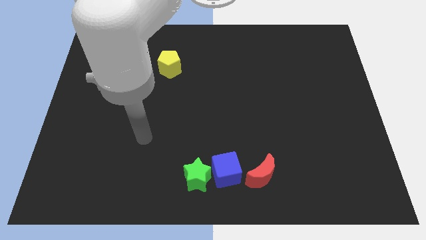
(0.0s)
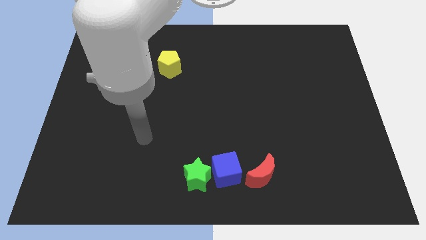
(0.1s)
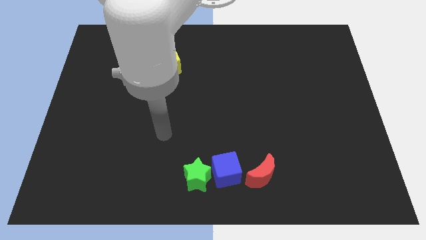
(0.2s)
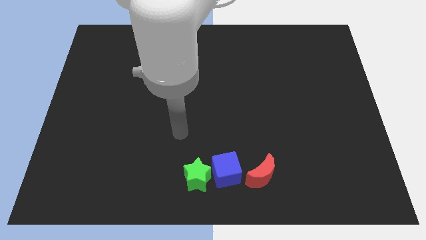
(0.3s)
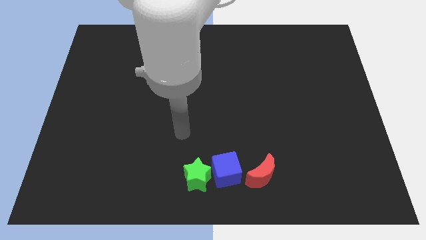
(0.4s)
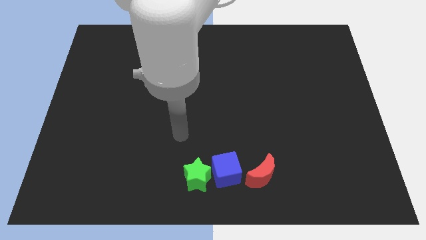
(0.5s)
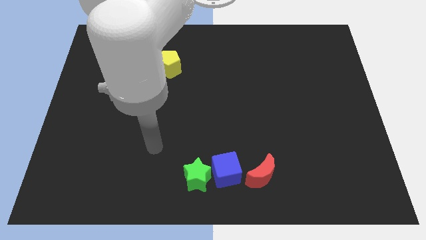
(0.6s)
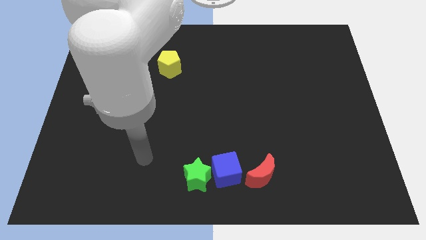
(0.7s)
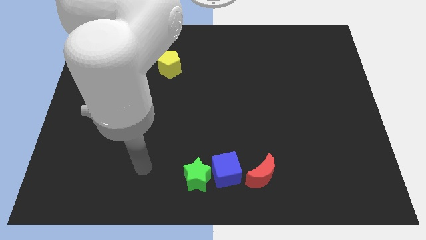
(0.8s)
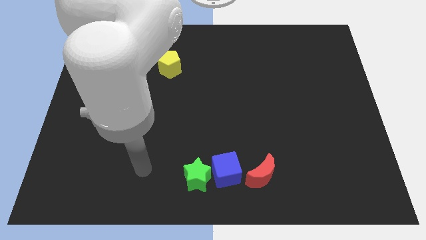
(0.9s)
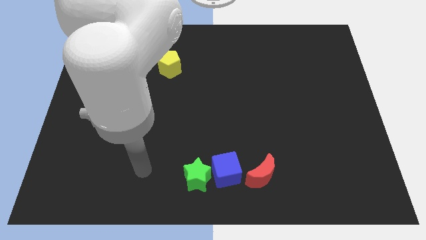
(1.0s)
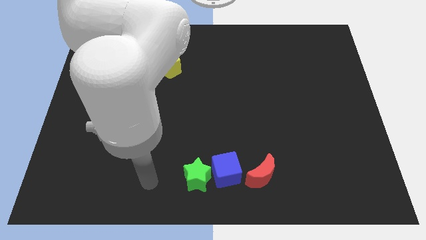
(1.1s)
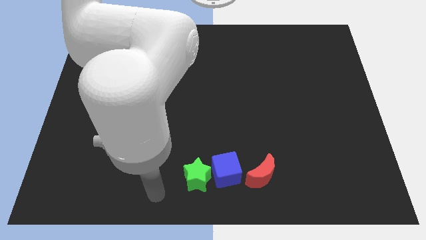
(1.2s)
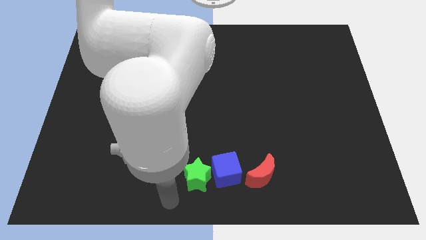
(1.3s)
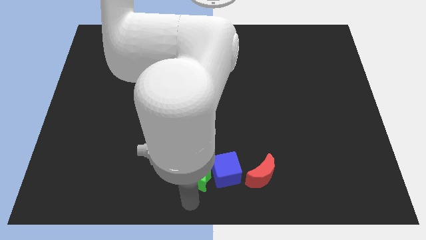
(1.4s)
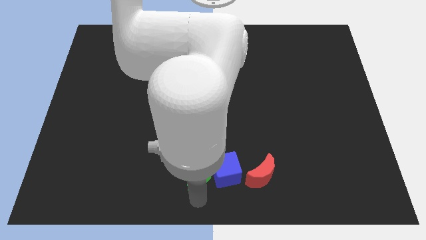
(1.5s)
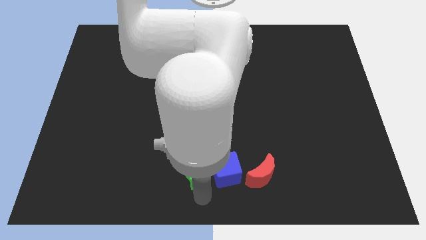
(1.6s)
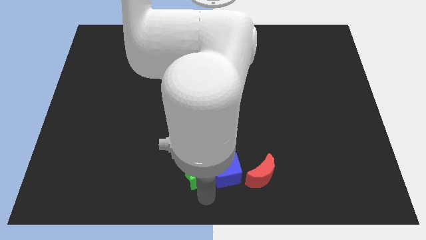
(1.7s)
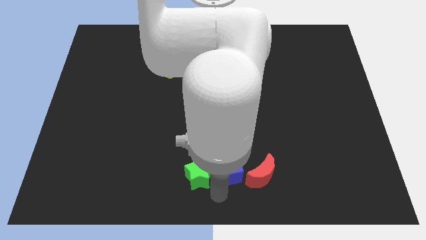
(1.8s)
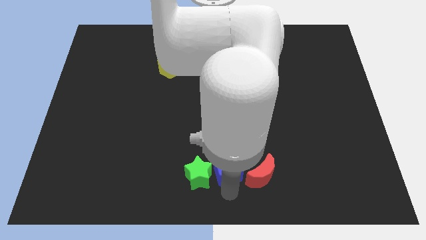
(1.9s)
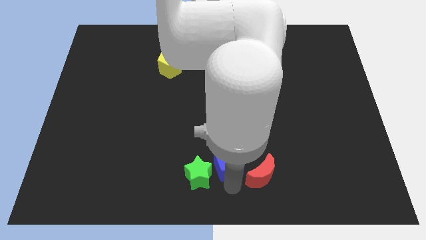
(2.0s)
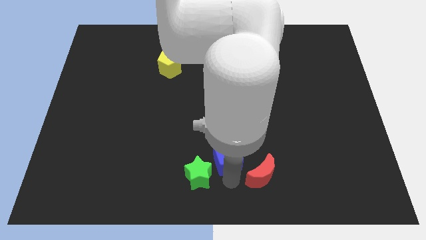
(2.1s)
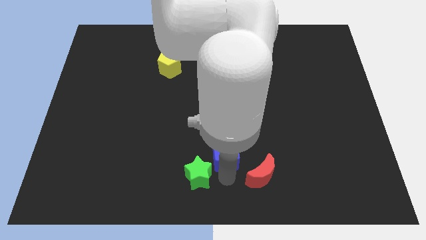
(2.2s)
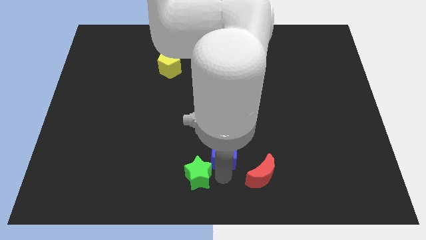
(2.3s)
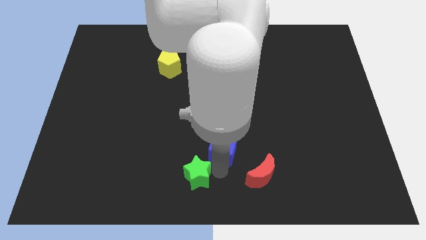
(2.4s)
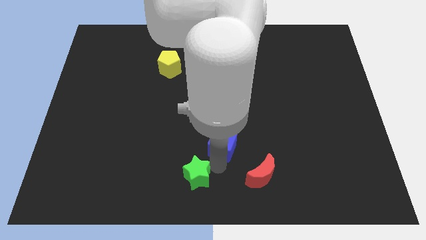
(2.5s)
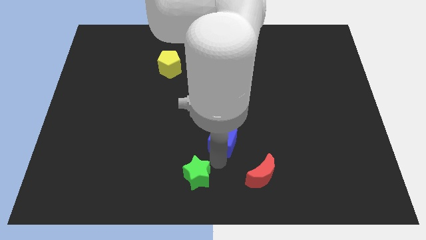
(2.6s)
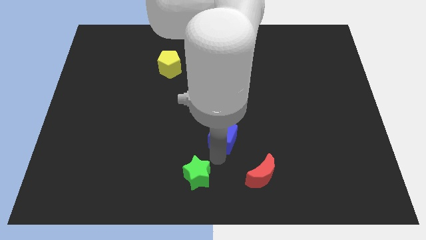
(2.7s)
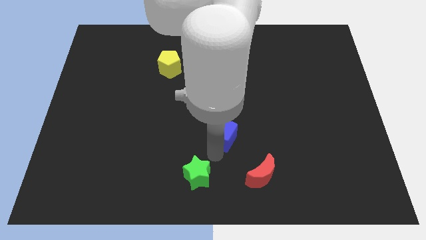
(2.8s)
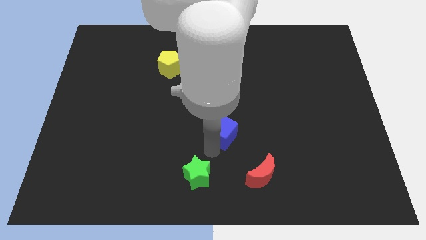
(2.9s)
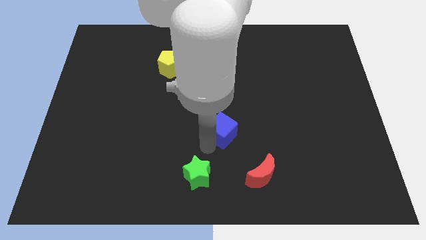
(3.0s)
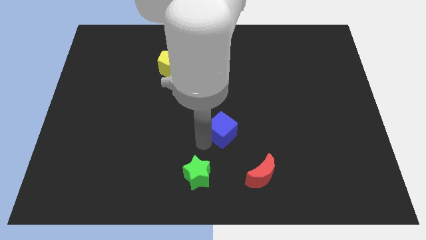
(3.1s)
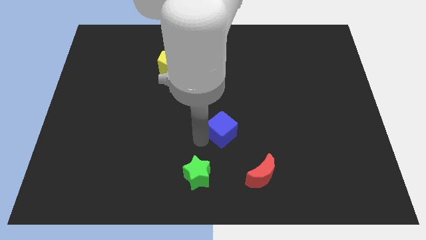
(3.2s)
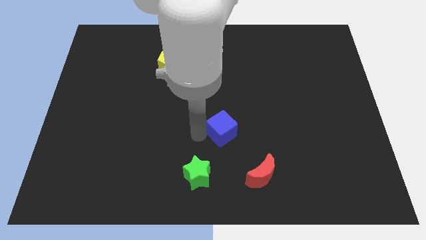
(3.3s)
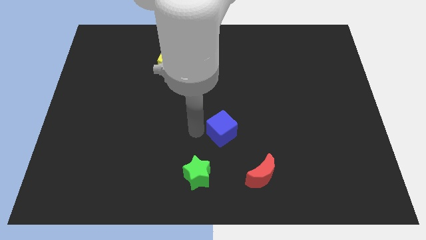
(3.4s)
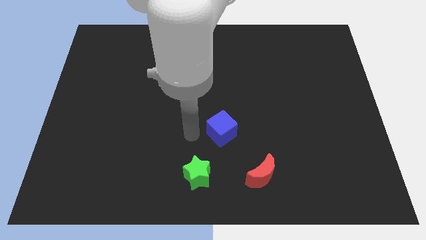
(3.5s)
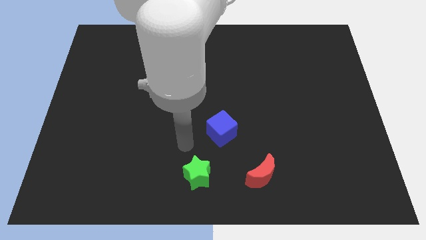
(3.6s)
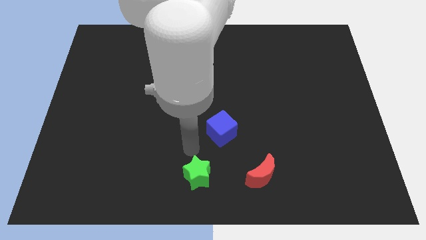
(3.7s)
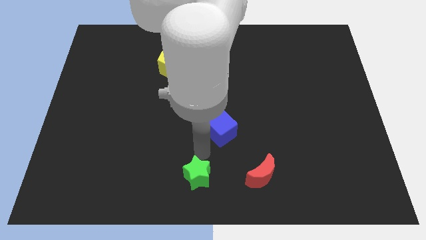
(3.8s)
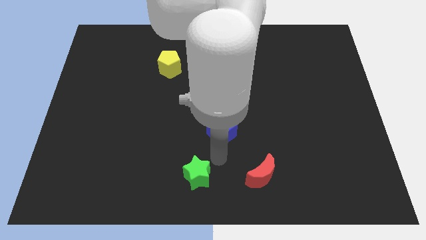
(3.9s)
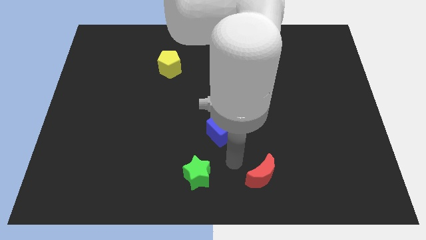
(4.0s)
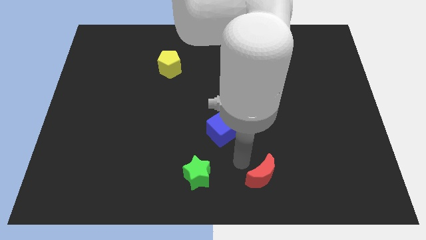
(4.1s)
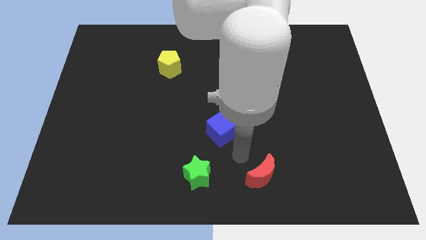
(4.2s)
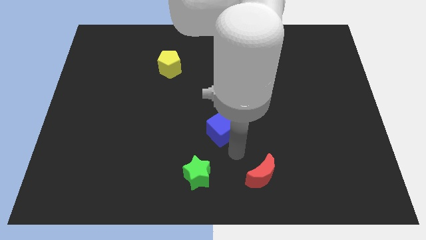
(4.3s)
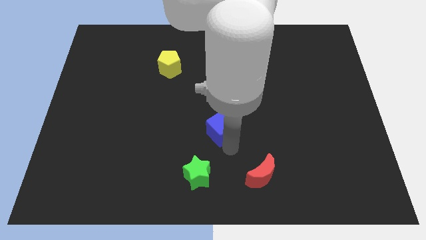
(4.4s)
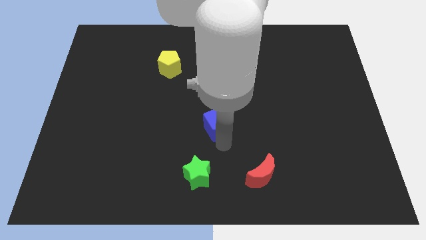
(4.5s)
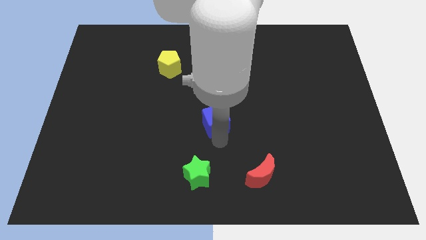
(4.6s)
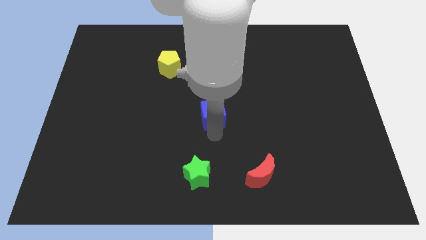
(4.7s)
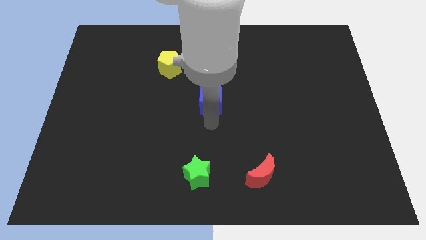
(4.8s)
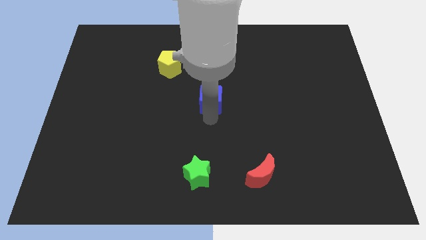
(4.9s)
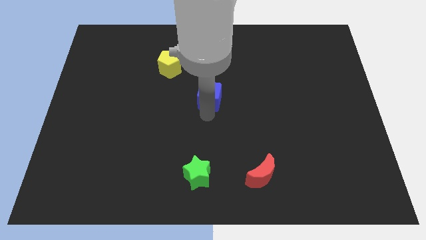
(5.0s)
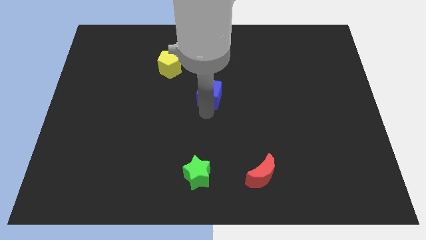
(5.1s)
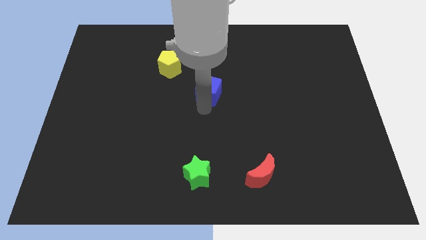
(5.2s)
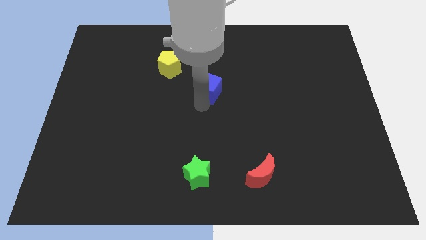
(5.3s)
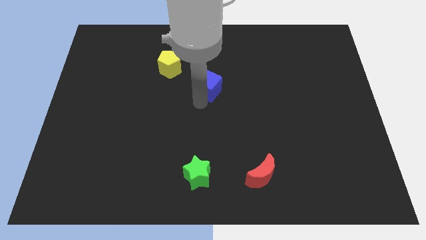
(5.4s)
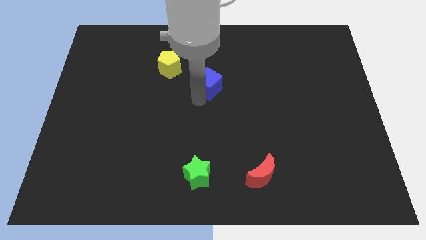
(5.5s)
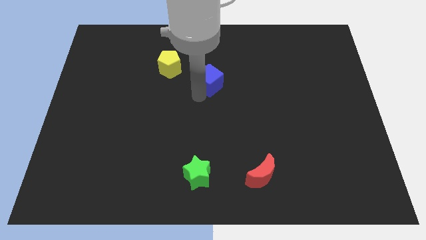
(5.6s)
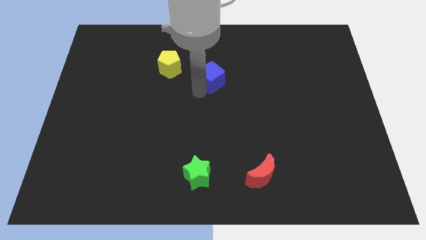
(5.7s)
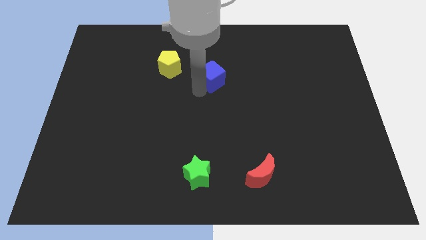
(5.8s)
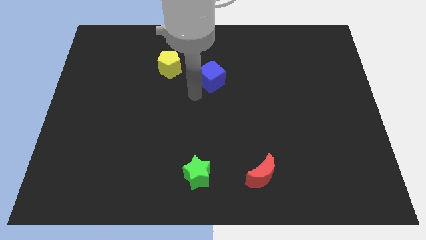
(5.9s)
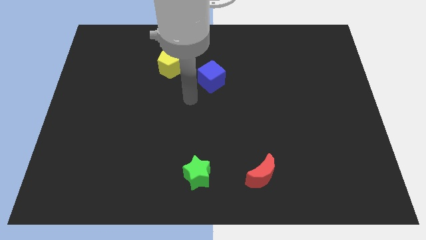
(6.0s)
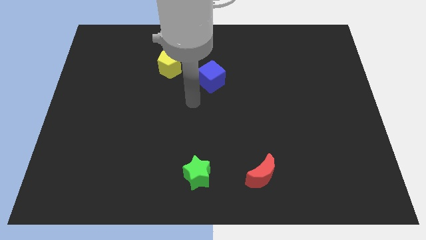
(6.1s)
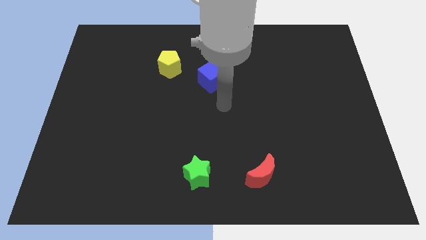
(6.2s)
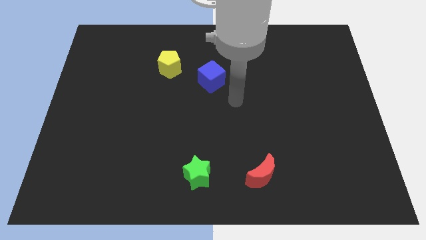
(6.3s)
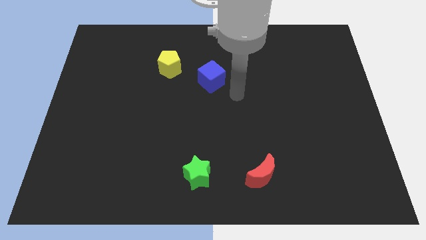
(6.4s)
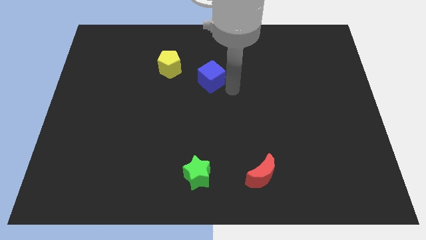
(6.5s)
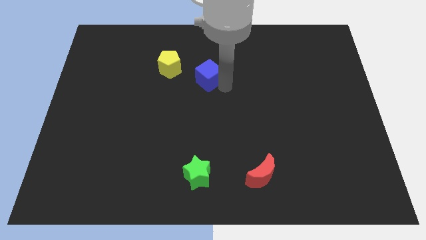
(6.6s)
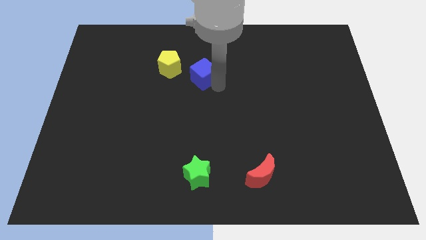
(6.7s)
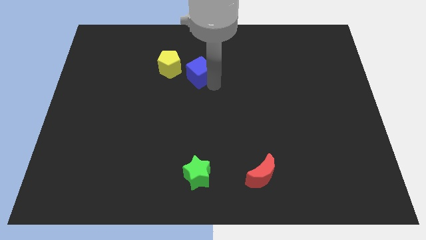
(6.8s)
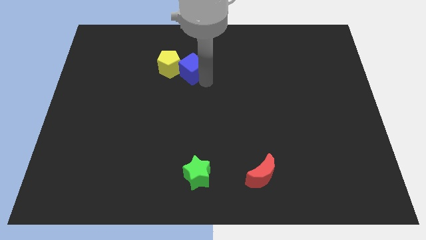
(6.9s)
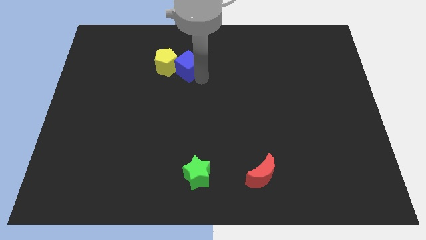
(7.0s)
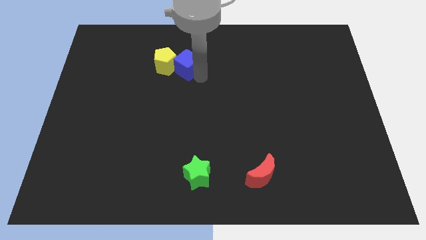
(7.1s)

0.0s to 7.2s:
move the blue cube close to the yellow pentagon

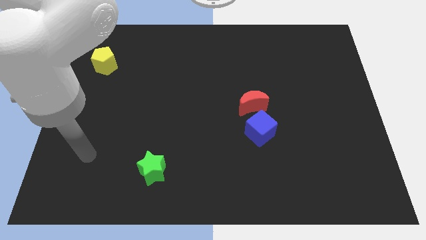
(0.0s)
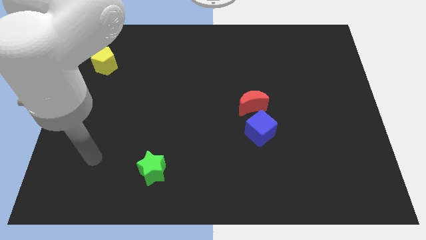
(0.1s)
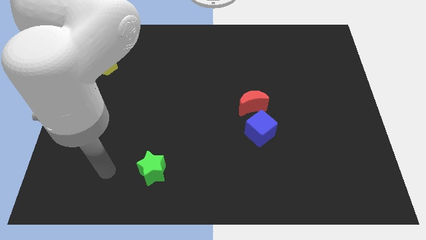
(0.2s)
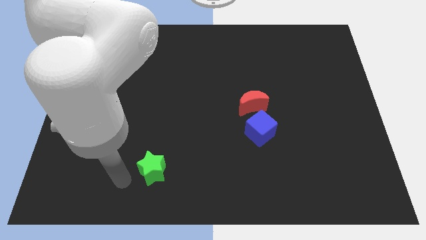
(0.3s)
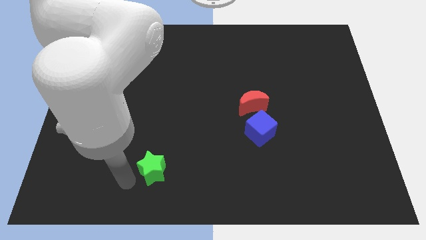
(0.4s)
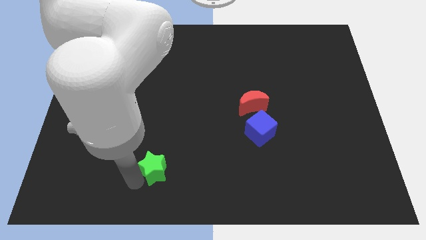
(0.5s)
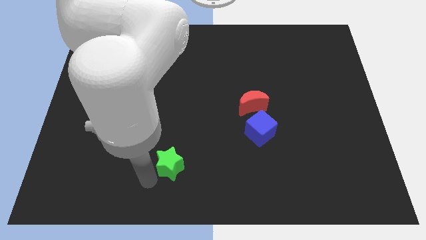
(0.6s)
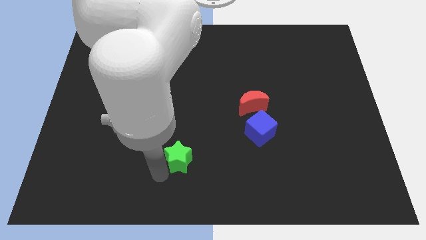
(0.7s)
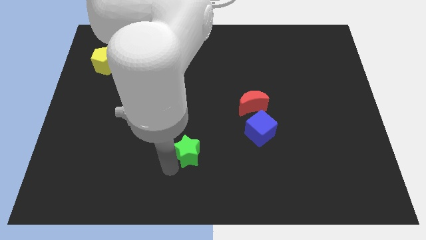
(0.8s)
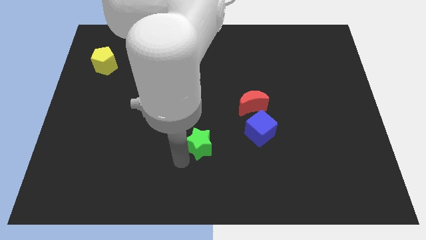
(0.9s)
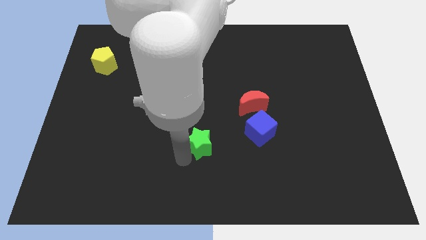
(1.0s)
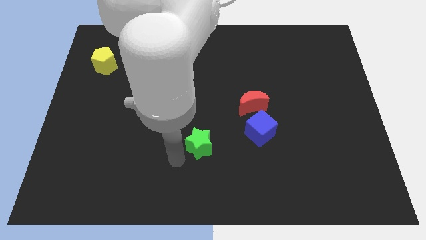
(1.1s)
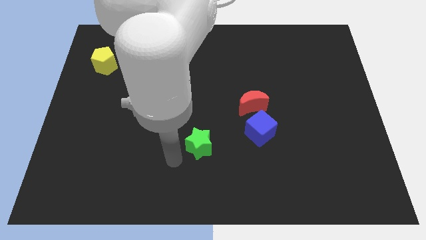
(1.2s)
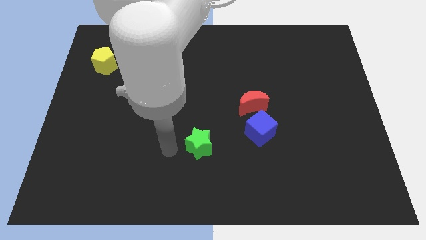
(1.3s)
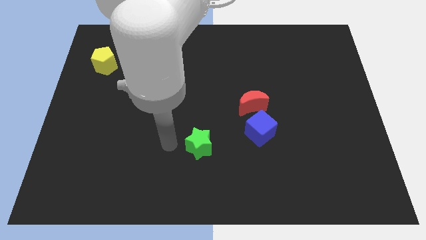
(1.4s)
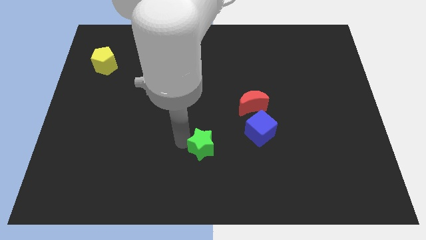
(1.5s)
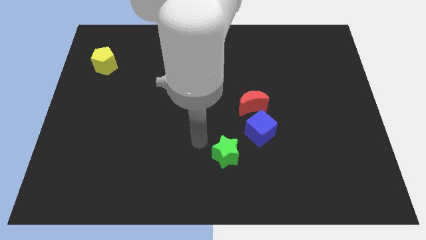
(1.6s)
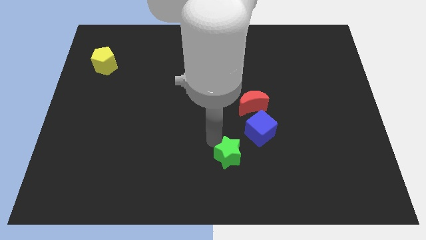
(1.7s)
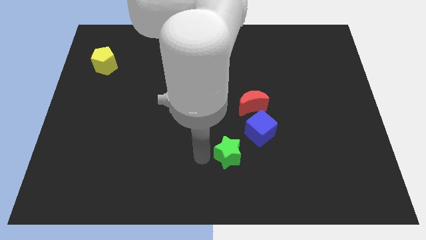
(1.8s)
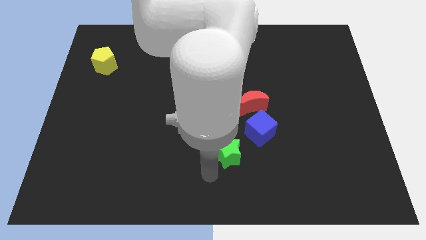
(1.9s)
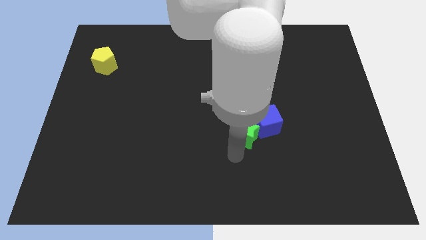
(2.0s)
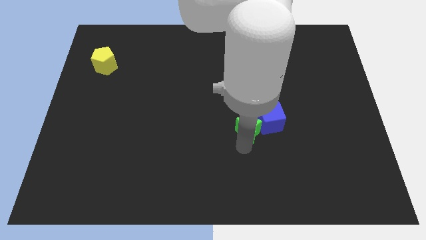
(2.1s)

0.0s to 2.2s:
push the green block next to the cube
